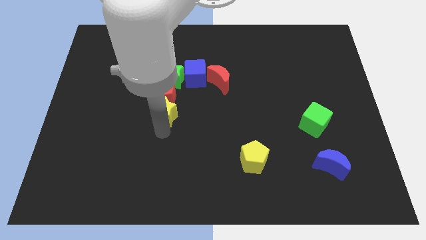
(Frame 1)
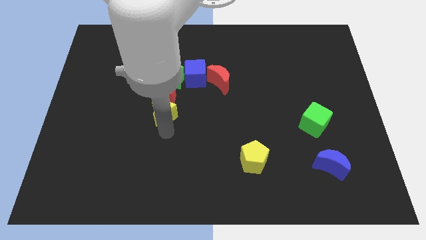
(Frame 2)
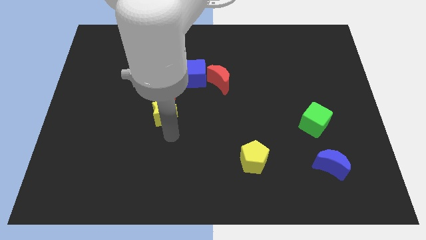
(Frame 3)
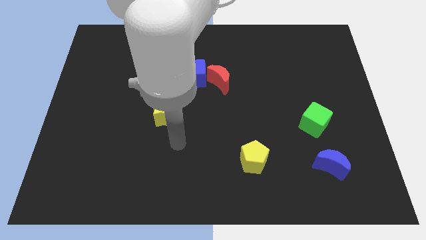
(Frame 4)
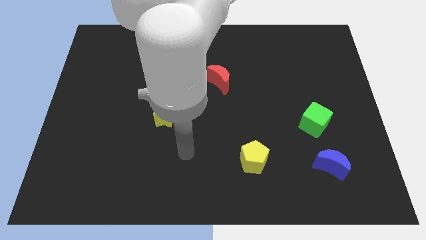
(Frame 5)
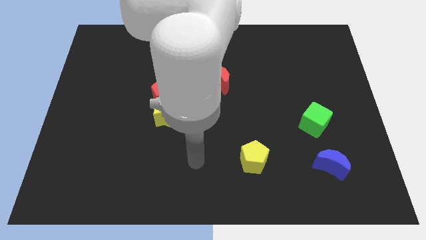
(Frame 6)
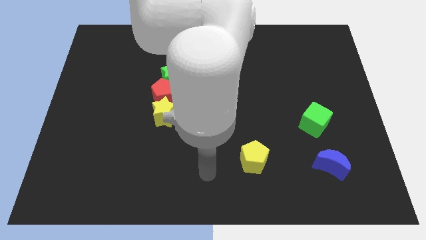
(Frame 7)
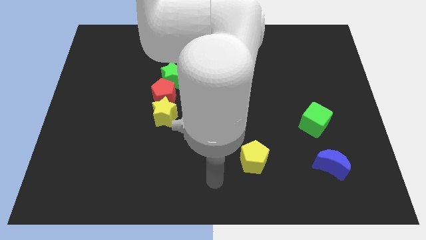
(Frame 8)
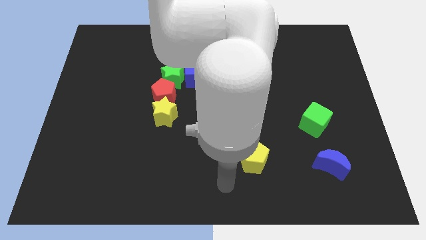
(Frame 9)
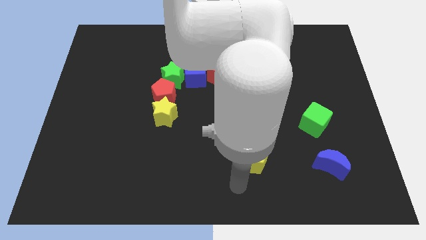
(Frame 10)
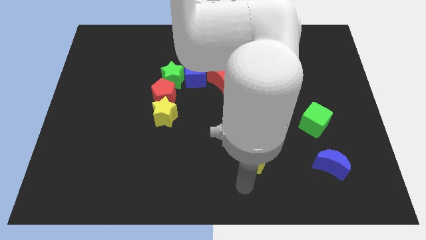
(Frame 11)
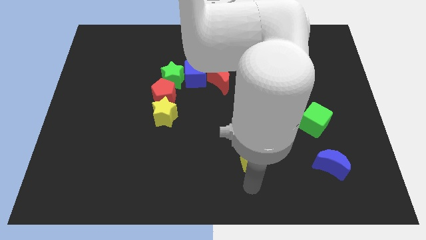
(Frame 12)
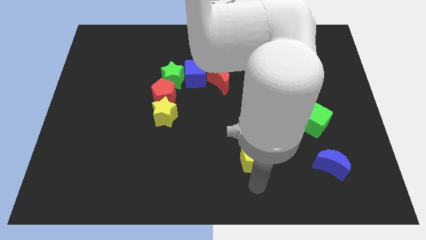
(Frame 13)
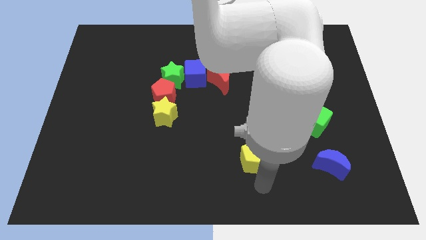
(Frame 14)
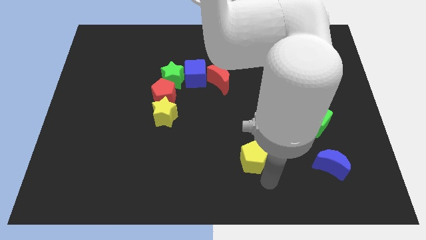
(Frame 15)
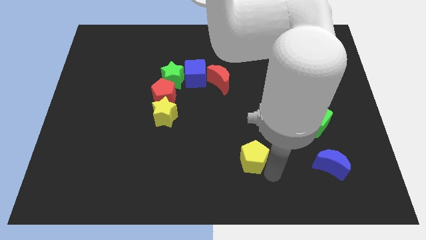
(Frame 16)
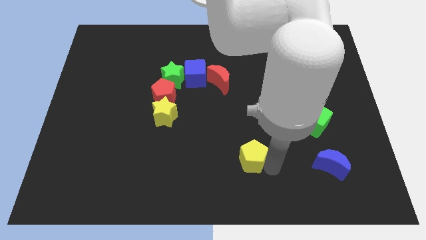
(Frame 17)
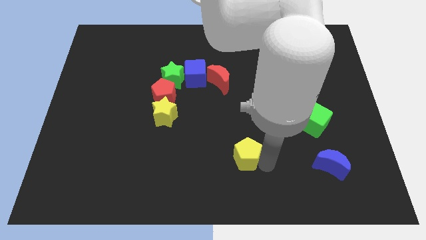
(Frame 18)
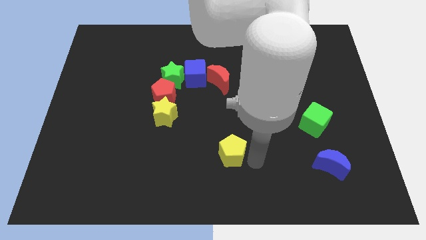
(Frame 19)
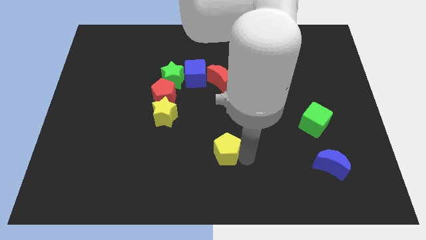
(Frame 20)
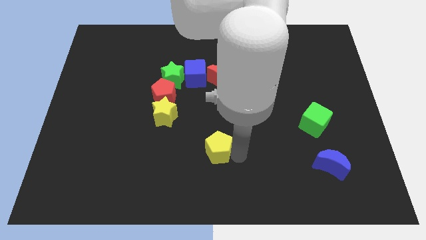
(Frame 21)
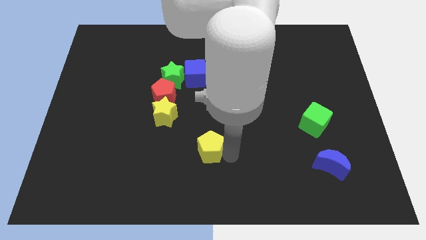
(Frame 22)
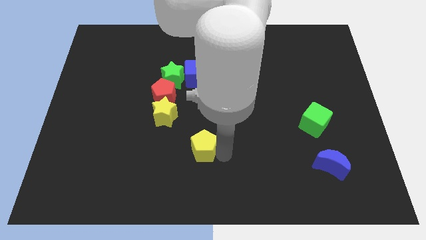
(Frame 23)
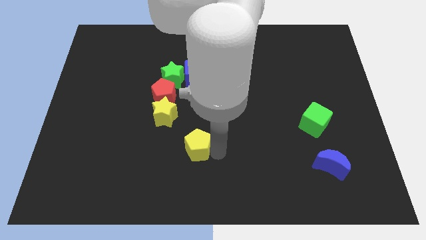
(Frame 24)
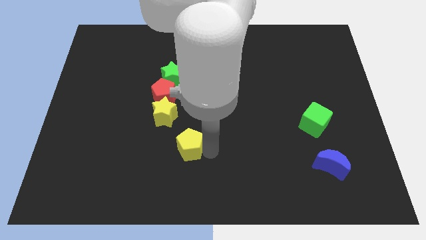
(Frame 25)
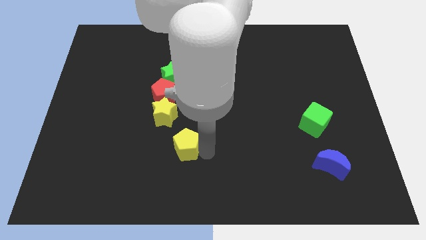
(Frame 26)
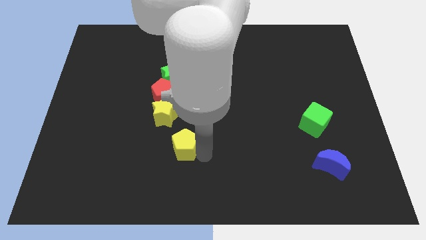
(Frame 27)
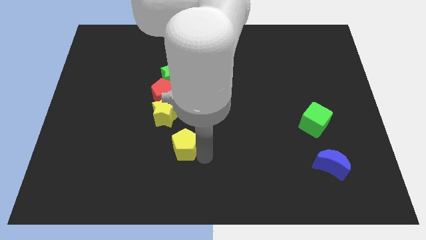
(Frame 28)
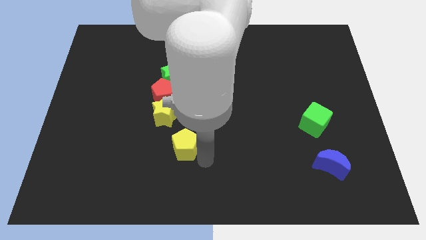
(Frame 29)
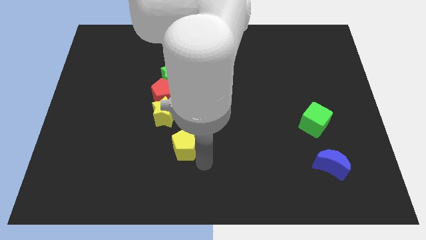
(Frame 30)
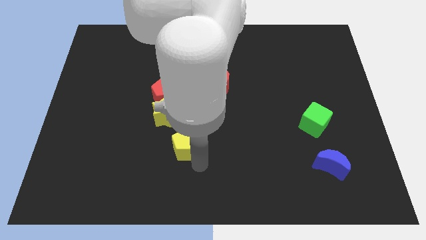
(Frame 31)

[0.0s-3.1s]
place the yellow pentagon diagonally bottom right to the yellow star

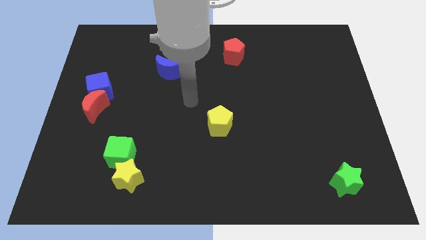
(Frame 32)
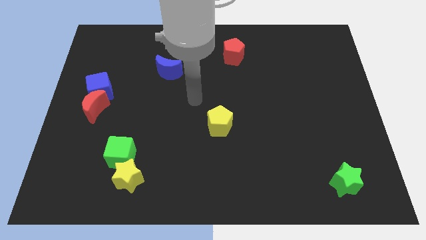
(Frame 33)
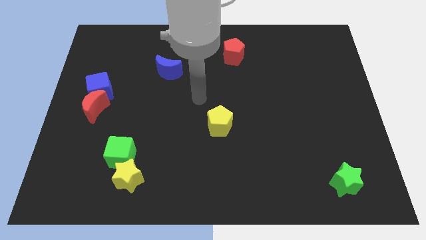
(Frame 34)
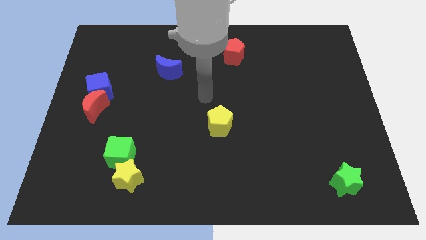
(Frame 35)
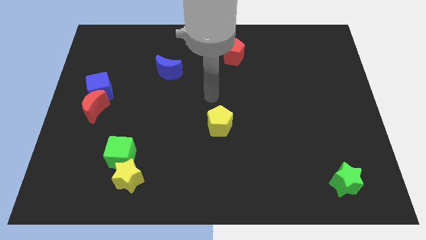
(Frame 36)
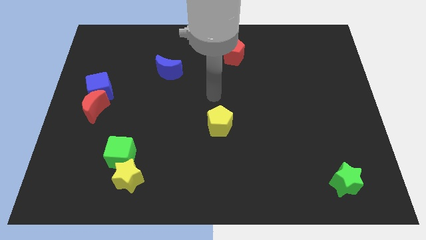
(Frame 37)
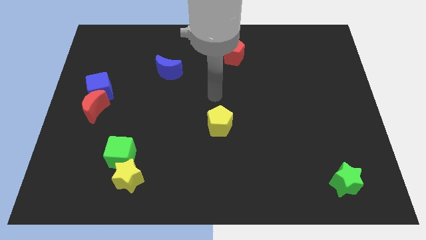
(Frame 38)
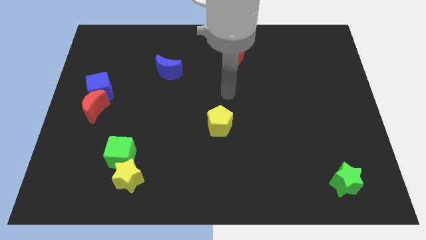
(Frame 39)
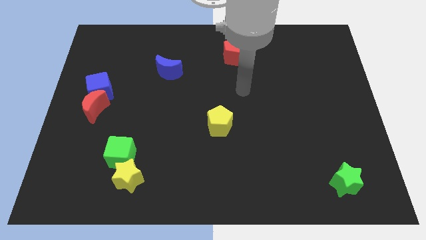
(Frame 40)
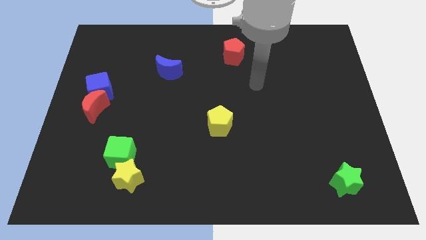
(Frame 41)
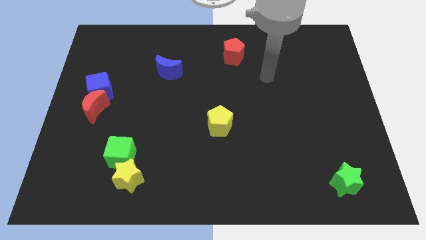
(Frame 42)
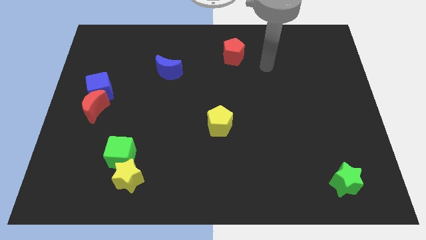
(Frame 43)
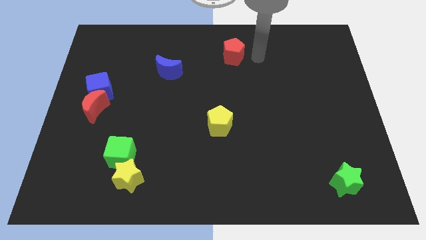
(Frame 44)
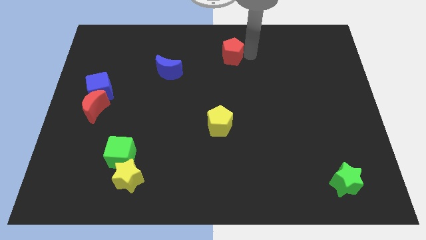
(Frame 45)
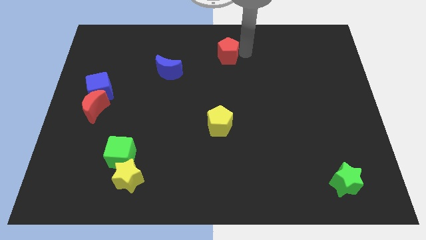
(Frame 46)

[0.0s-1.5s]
move your arm close to the red pentagon

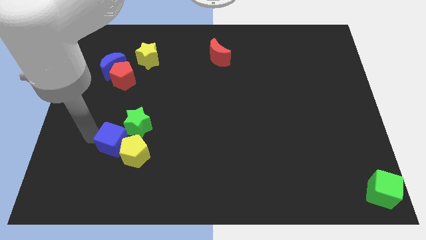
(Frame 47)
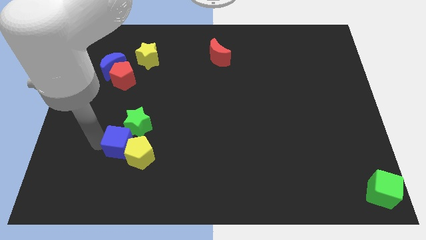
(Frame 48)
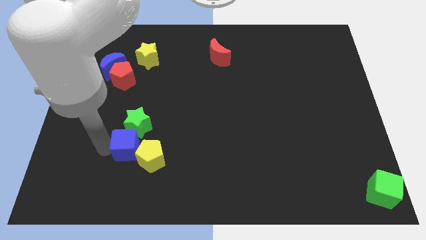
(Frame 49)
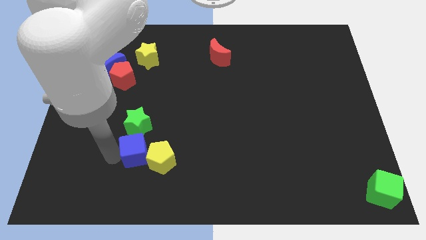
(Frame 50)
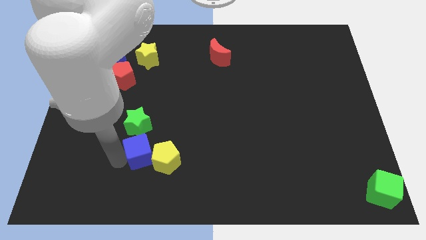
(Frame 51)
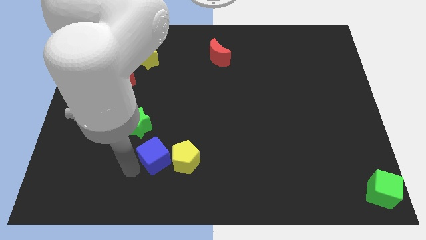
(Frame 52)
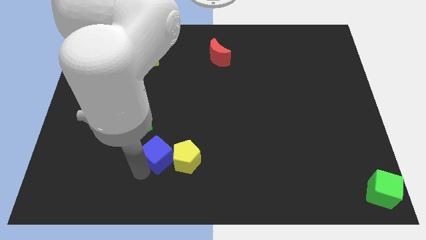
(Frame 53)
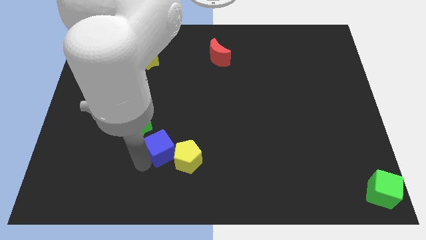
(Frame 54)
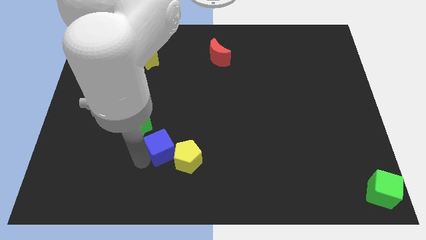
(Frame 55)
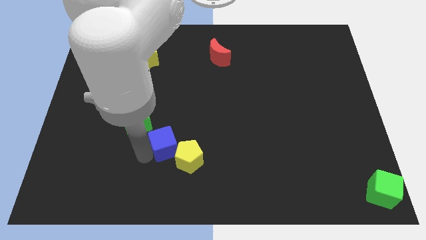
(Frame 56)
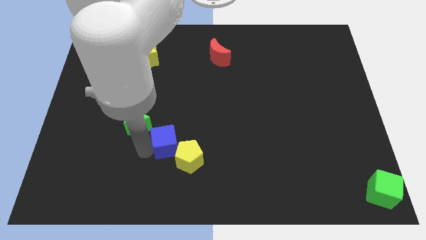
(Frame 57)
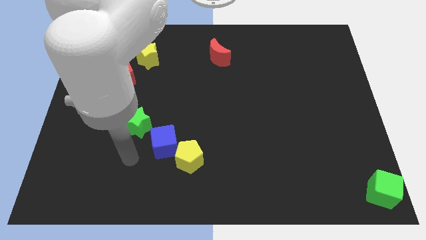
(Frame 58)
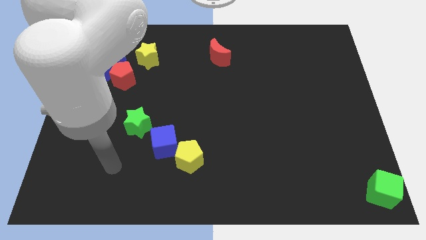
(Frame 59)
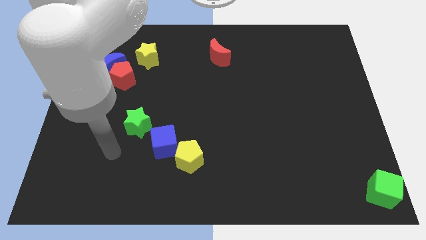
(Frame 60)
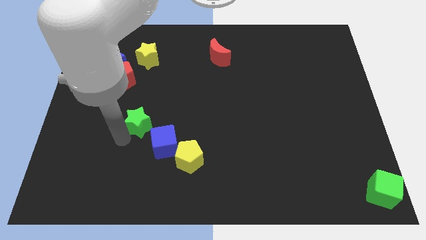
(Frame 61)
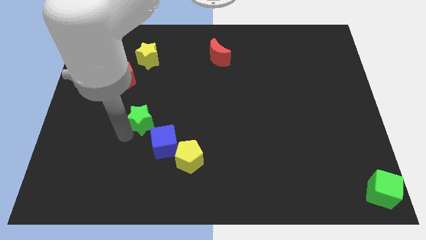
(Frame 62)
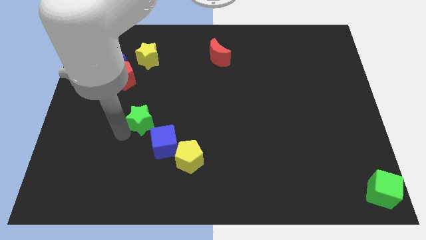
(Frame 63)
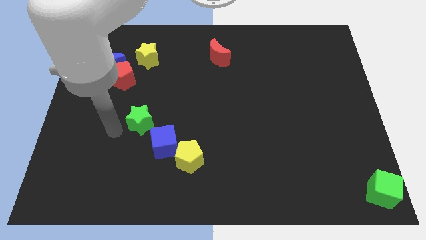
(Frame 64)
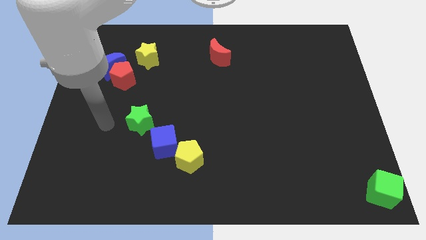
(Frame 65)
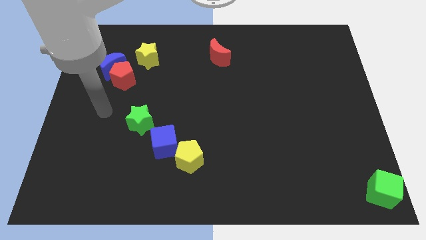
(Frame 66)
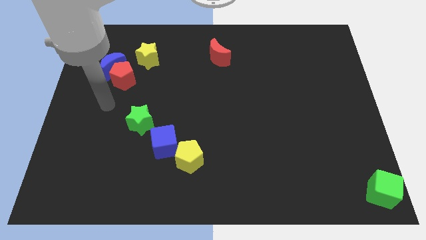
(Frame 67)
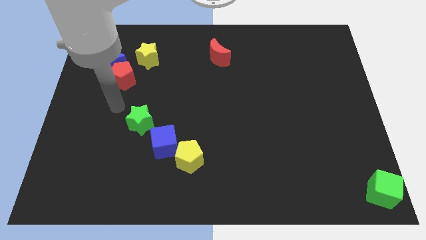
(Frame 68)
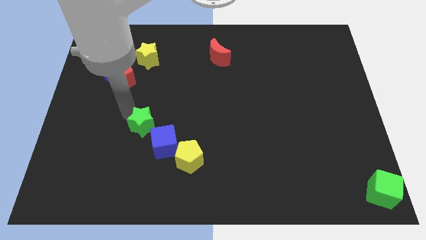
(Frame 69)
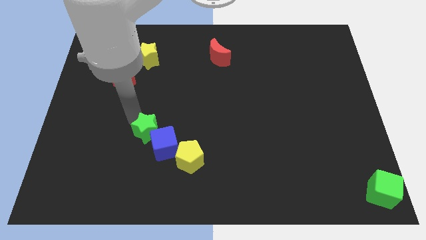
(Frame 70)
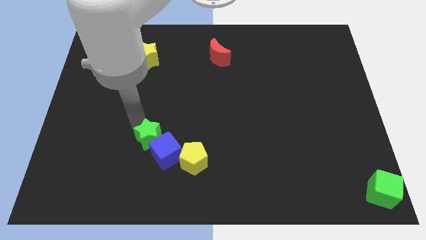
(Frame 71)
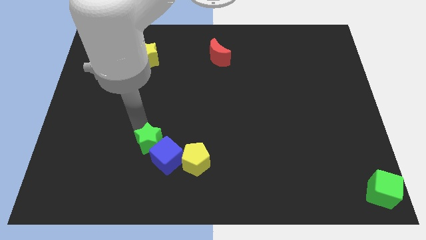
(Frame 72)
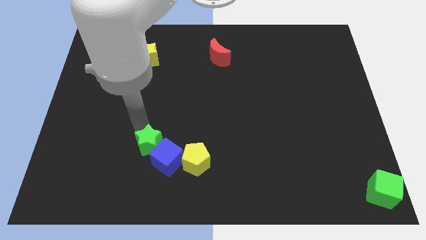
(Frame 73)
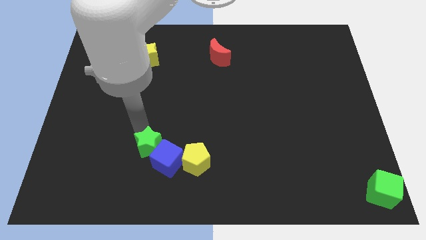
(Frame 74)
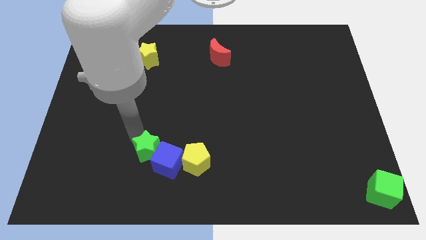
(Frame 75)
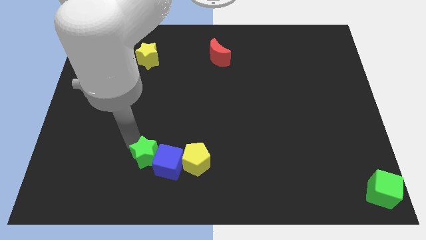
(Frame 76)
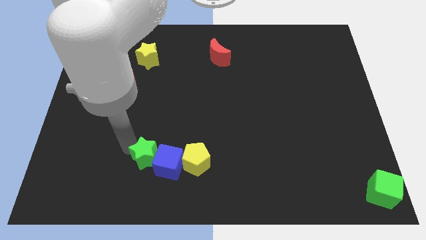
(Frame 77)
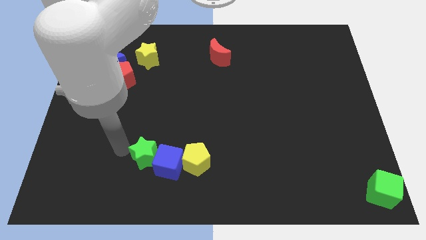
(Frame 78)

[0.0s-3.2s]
push green star into the blue cube

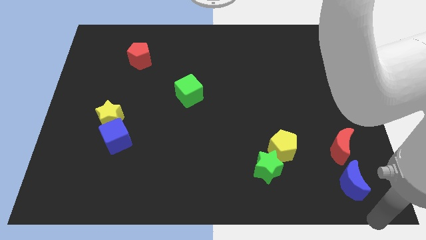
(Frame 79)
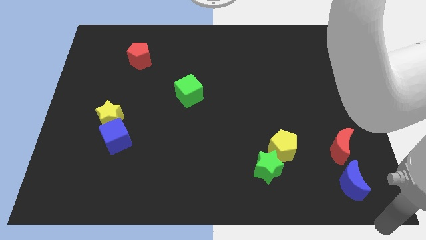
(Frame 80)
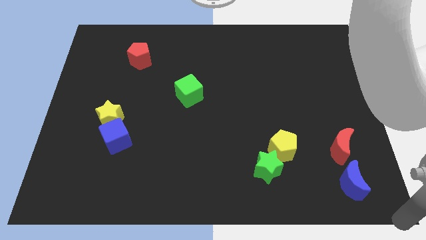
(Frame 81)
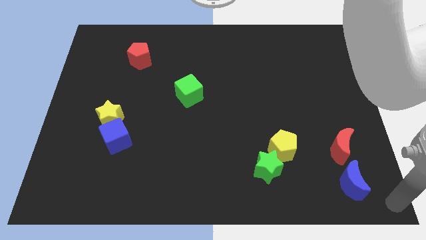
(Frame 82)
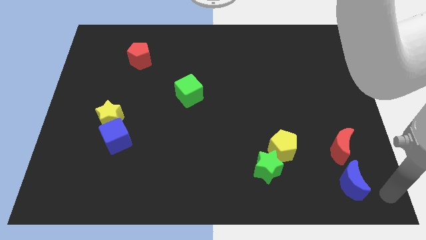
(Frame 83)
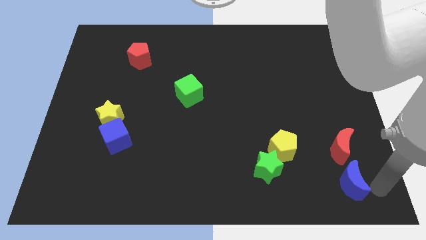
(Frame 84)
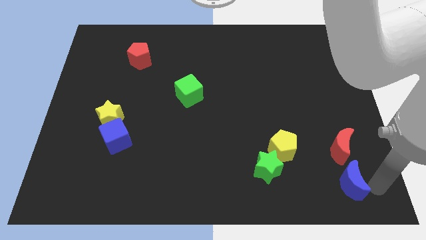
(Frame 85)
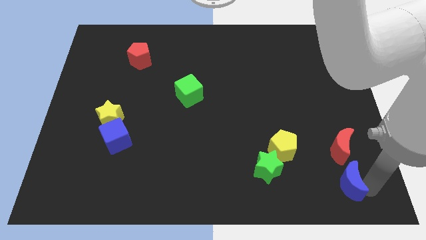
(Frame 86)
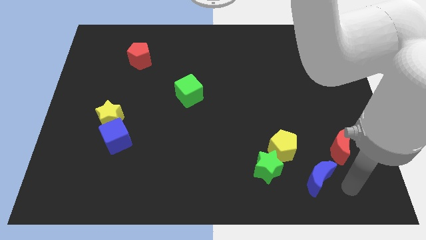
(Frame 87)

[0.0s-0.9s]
move the blue crescent towards the yellow pentagon

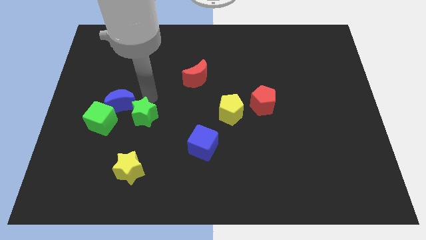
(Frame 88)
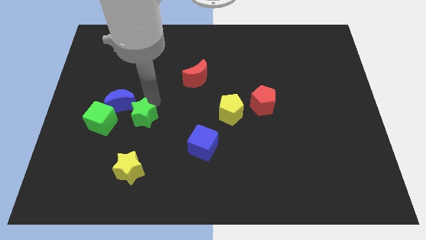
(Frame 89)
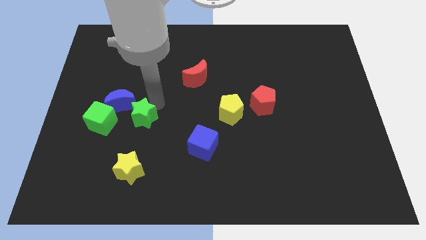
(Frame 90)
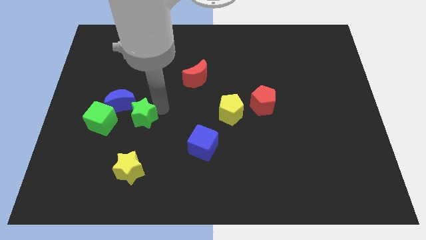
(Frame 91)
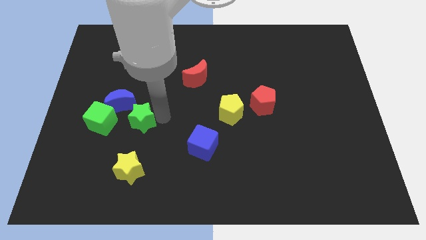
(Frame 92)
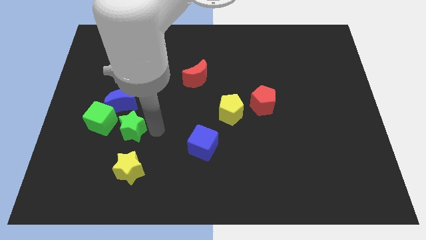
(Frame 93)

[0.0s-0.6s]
push the green star towards the green cube
